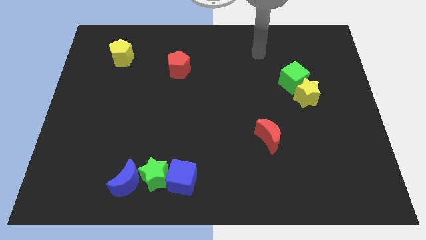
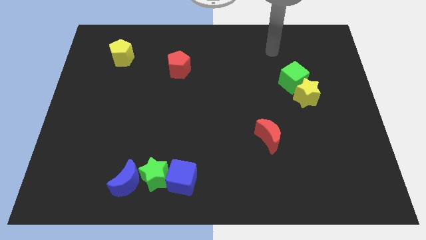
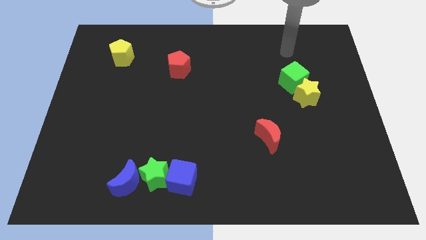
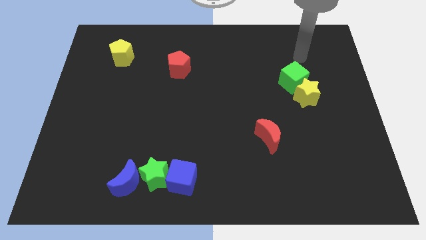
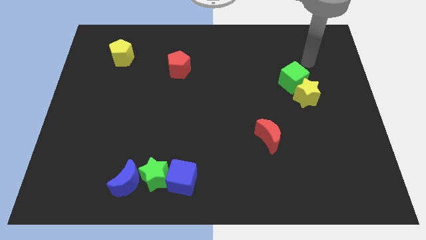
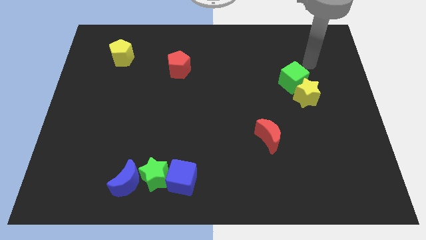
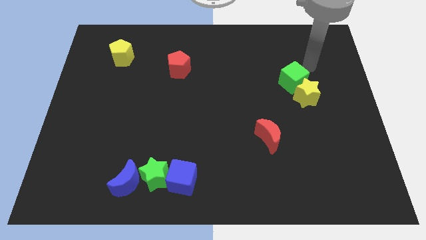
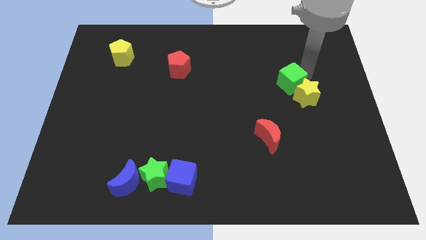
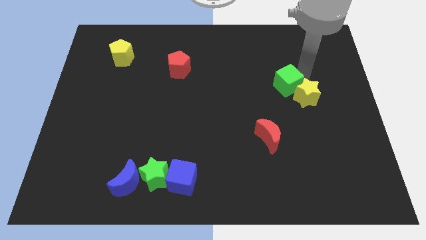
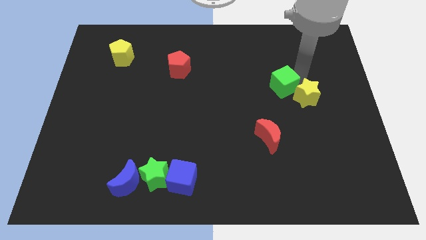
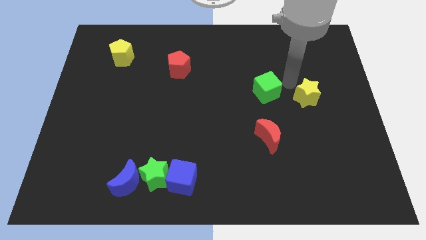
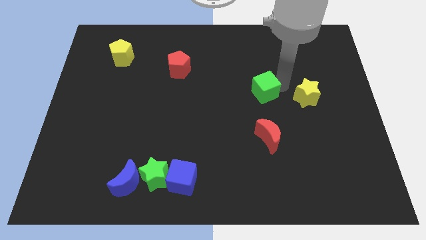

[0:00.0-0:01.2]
separate the green cube from the yellow star

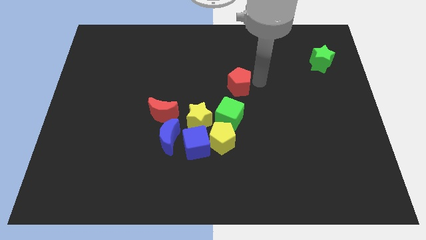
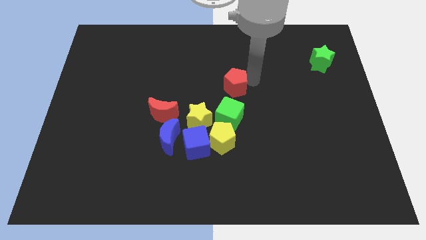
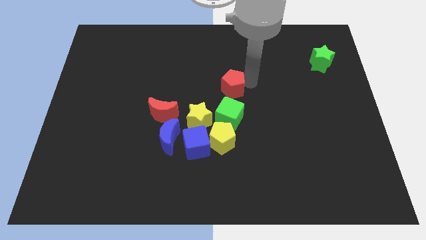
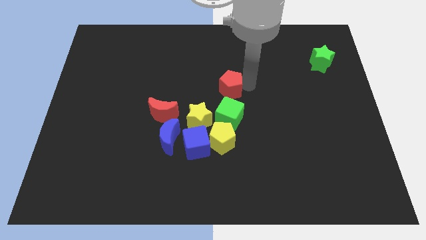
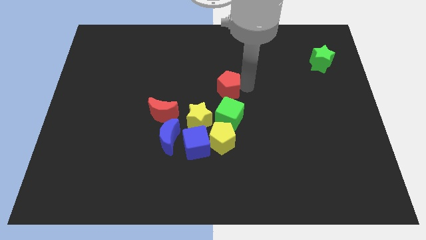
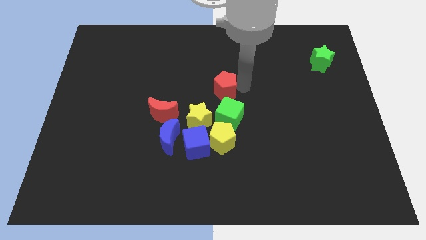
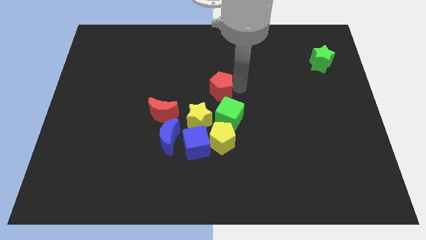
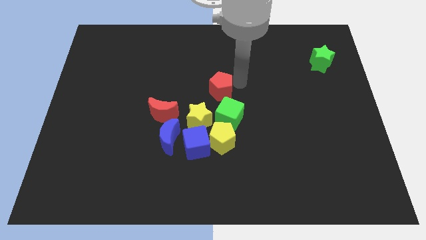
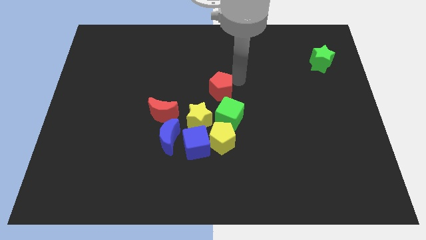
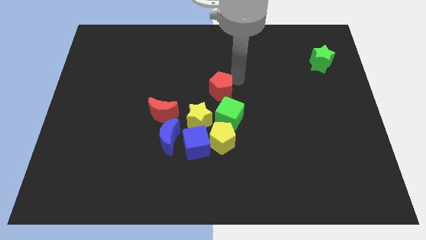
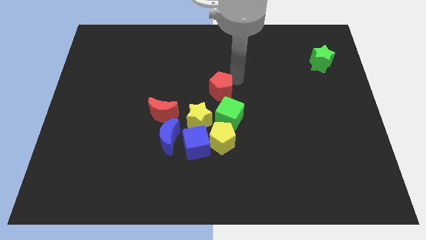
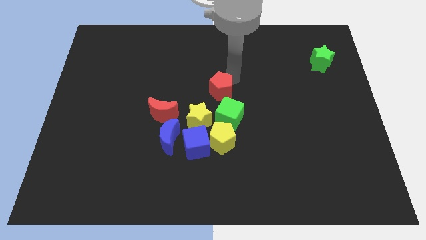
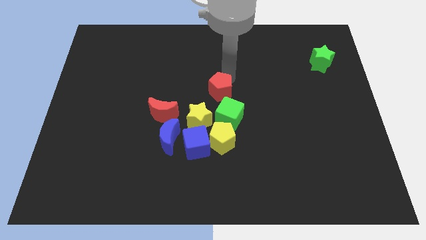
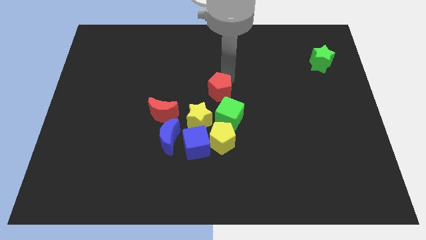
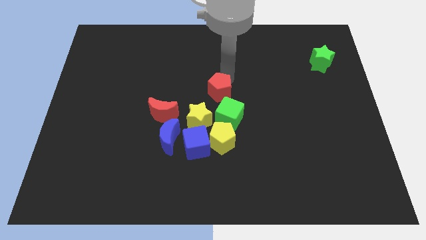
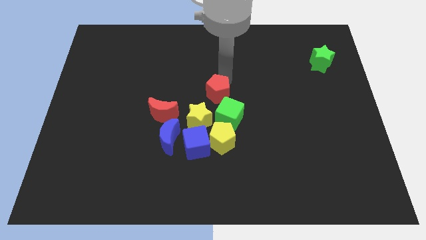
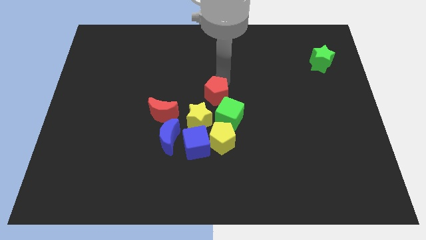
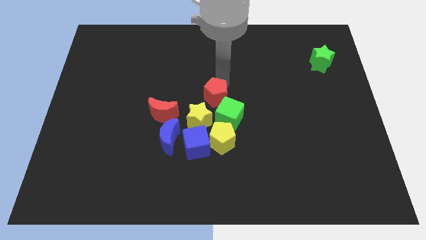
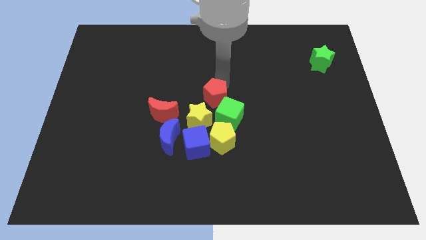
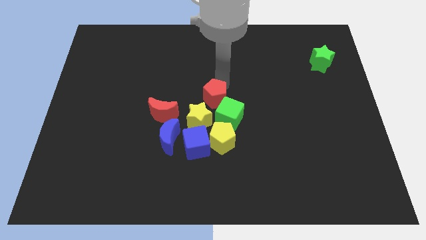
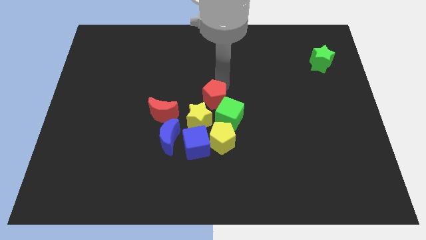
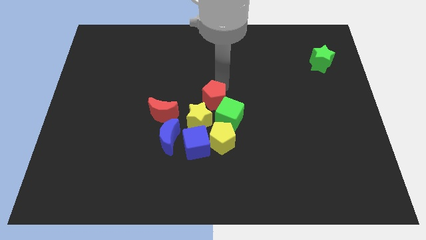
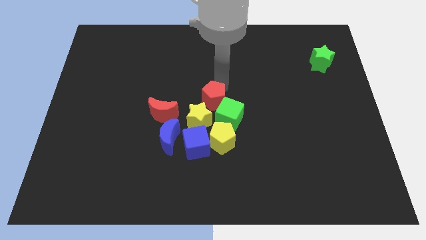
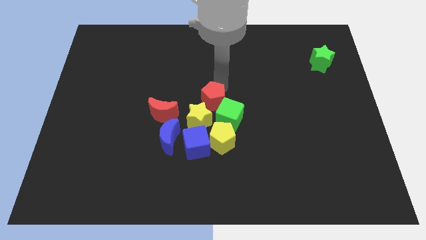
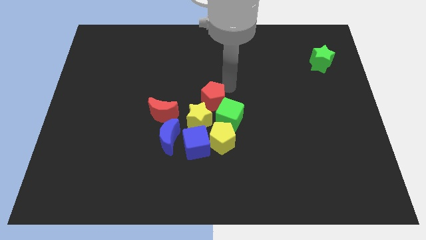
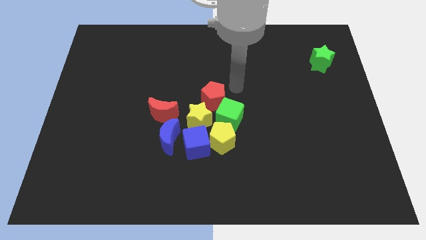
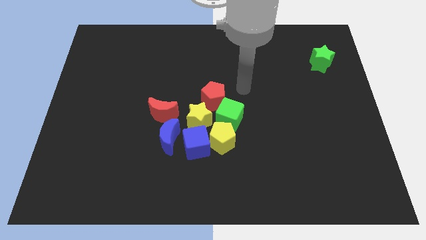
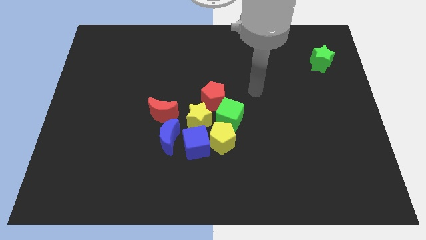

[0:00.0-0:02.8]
move the red pentagon near the yellow star

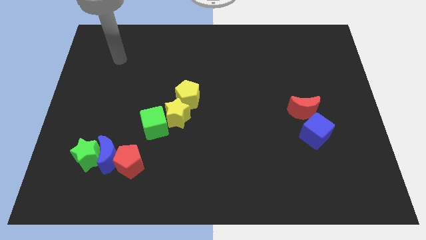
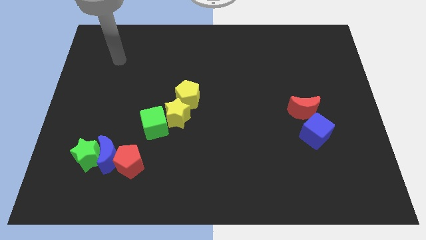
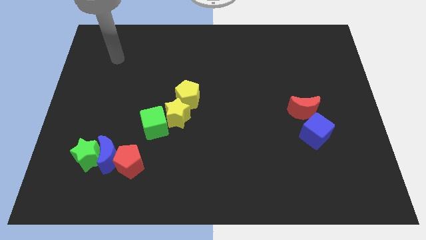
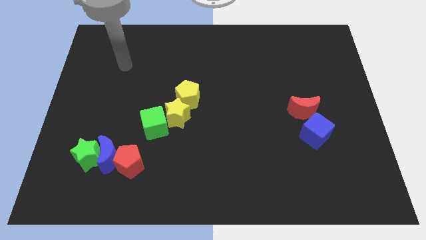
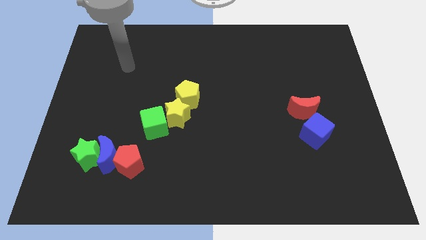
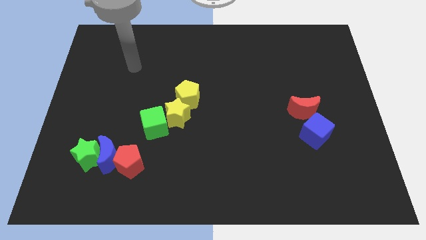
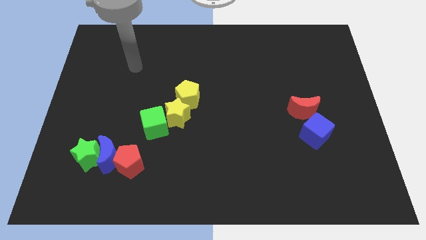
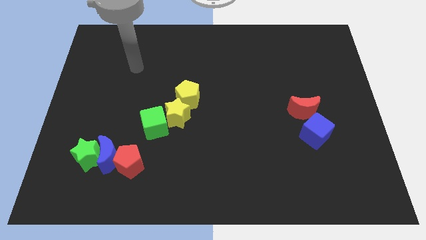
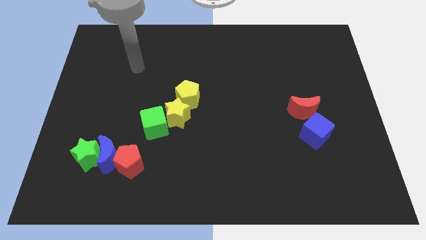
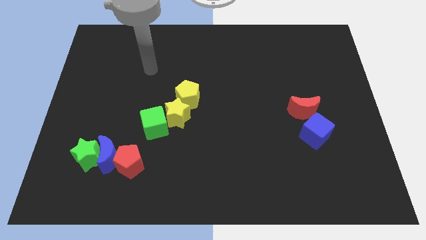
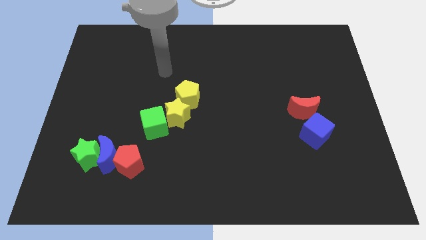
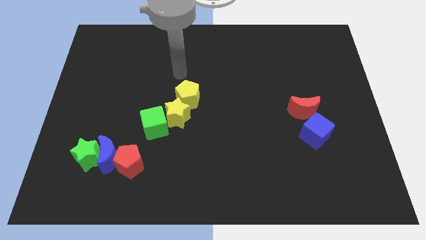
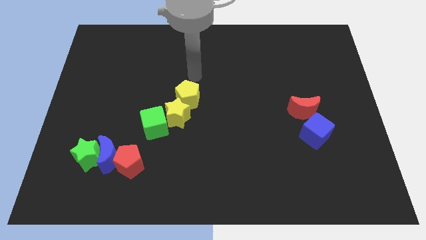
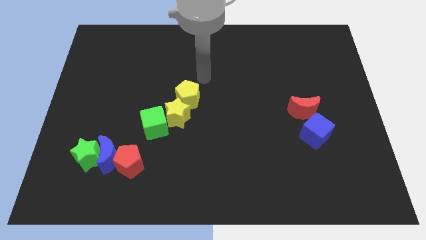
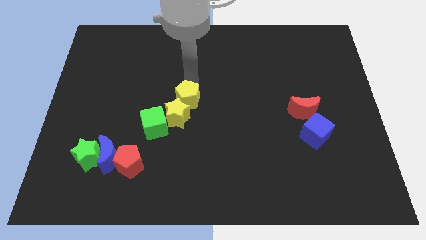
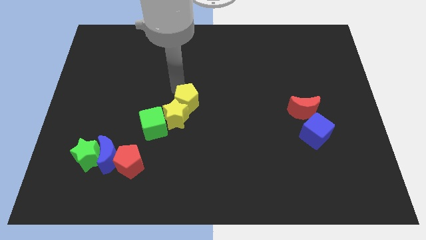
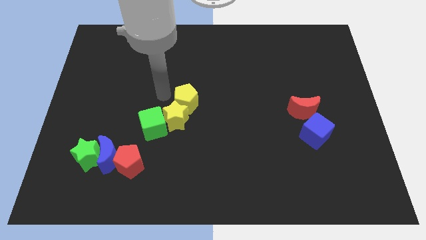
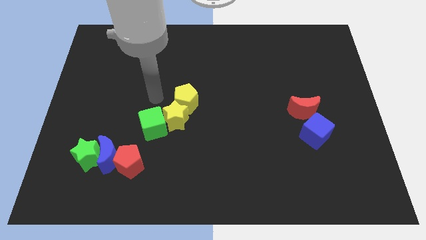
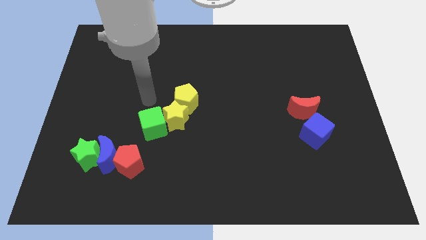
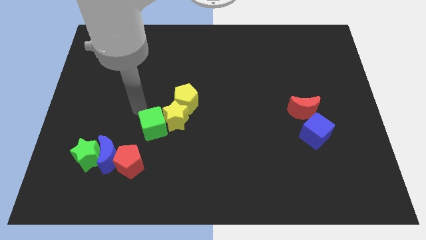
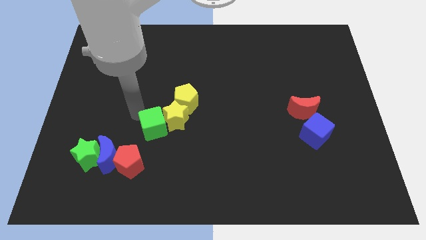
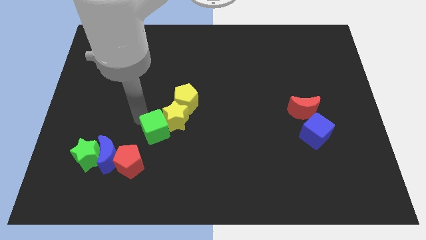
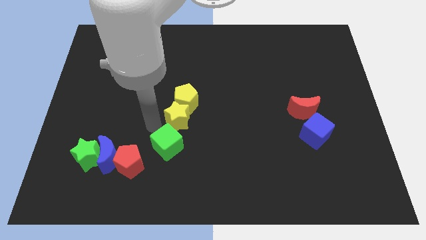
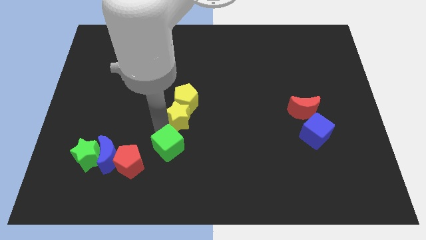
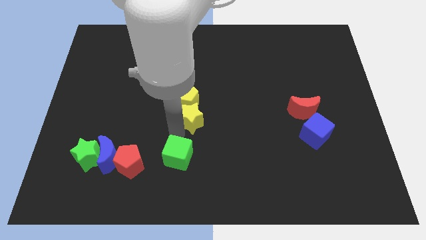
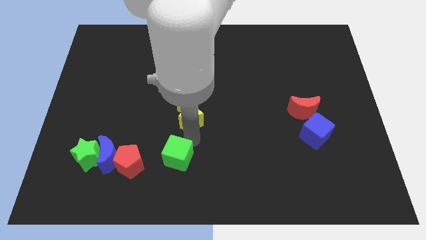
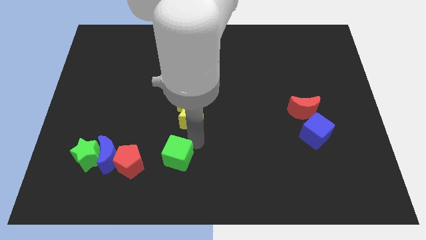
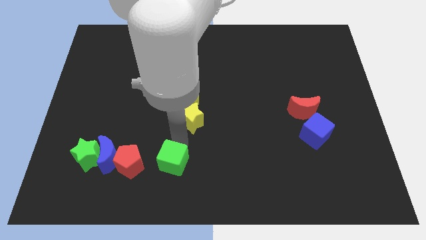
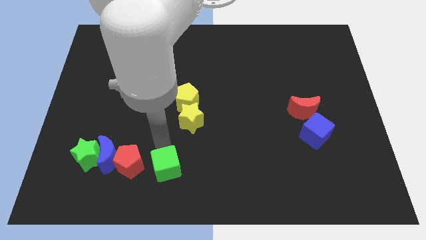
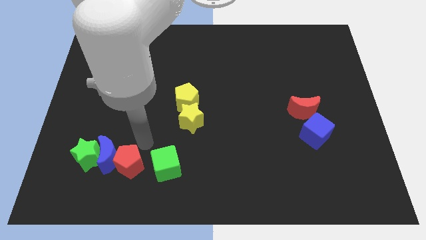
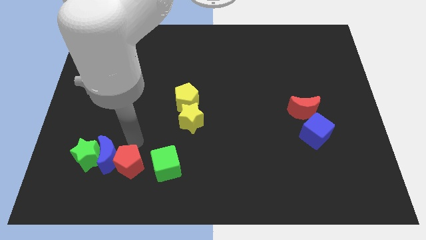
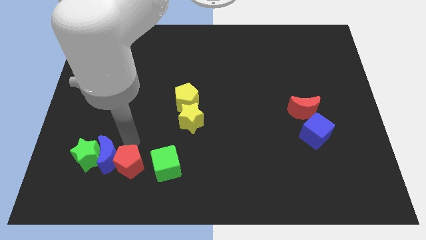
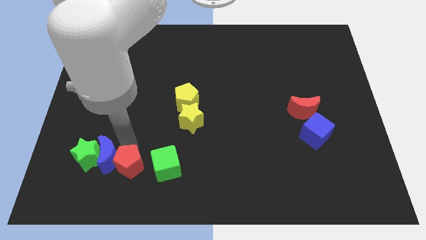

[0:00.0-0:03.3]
put the green cube parallel right to the red pentagon

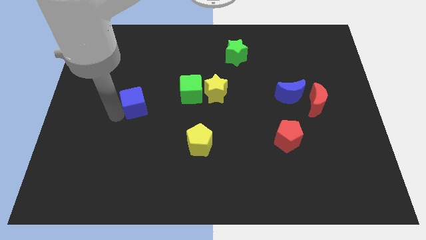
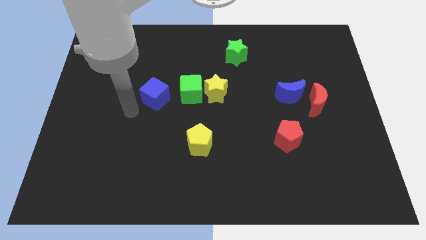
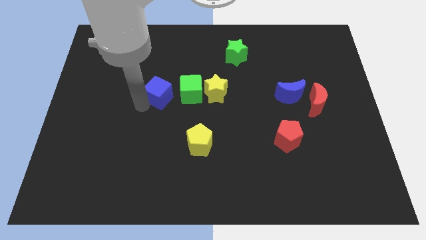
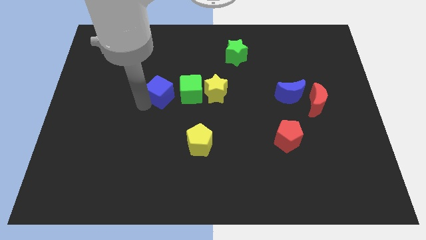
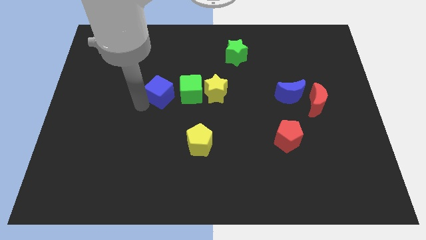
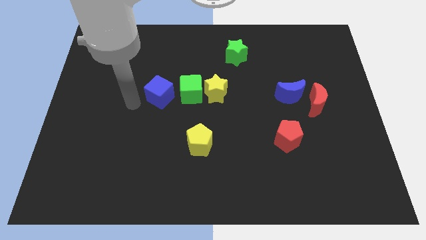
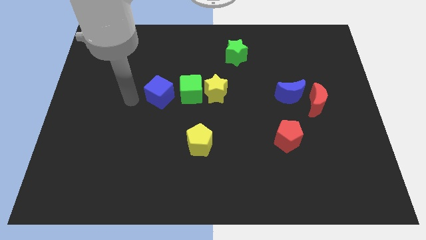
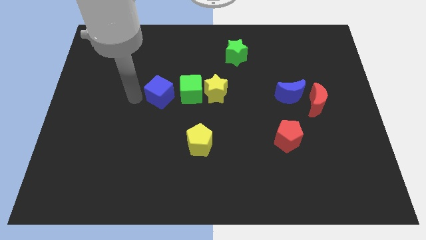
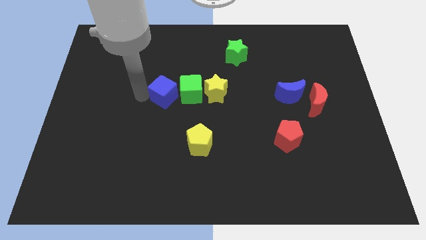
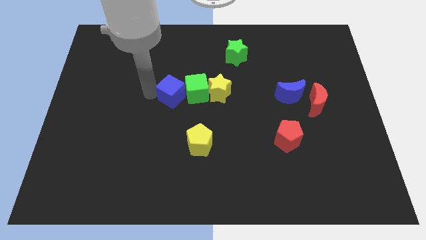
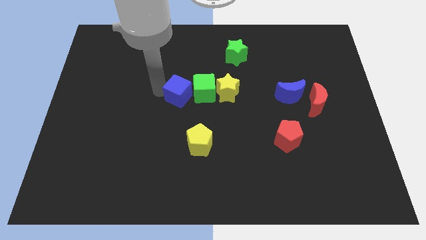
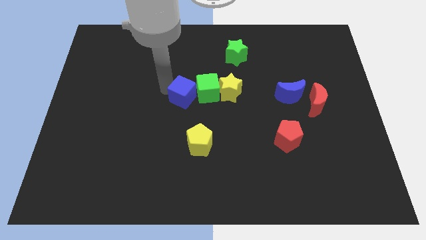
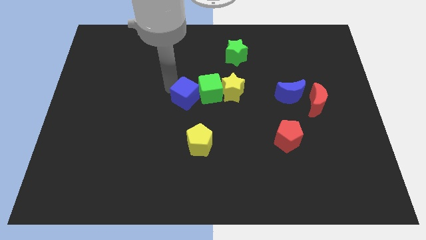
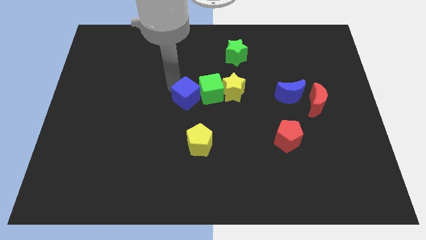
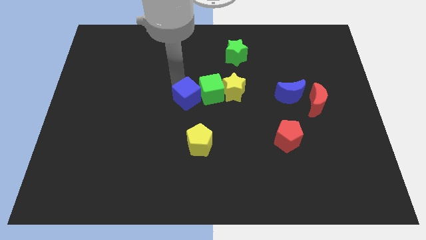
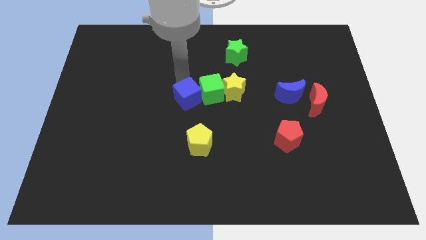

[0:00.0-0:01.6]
slide the blue cube into the green cube

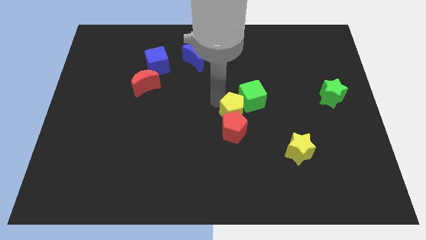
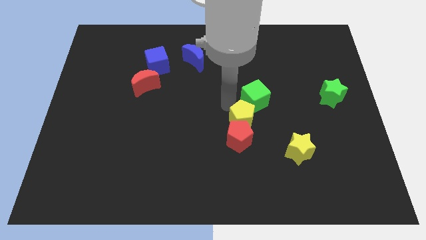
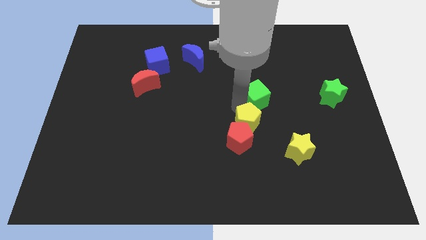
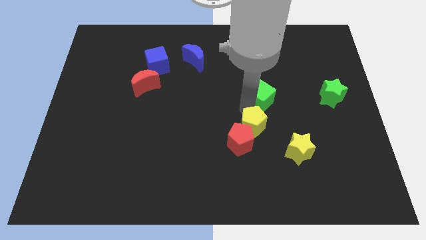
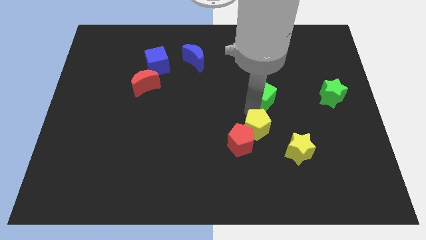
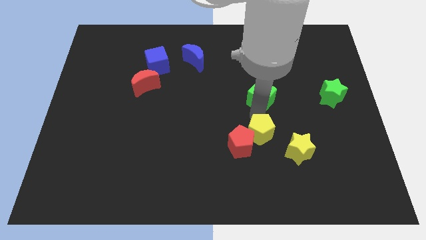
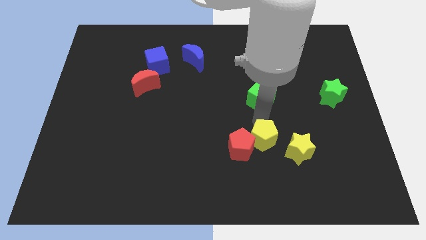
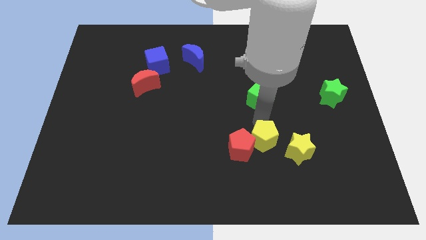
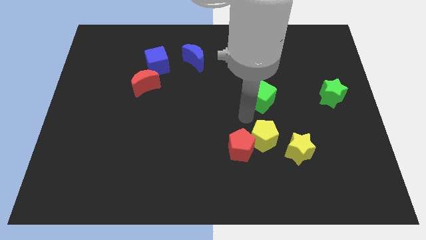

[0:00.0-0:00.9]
push yellow pentagon below green cube
